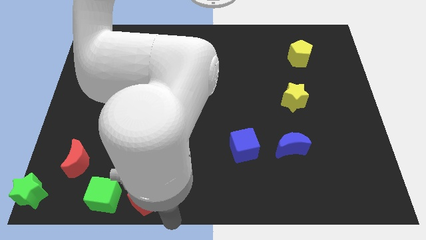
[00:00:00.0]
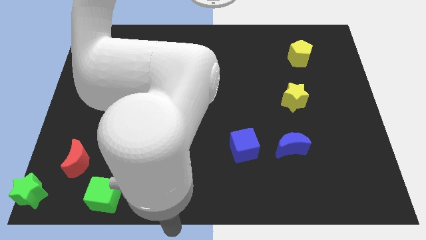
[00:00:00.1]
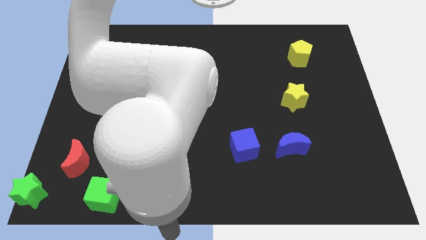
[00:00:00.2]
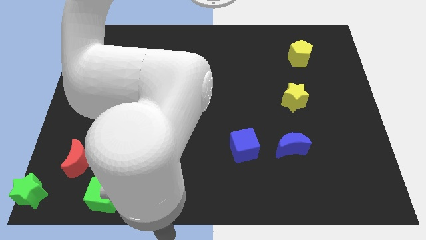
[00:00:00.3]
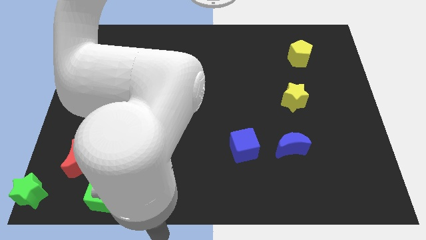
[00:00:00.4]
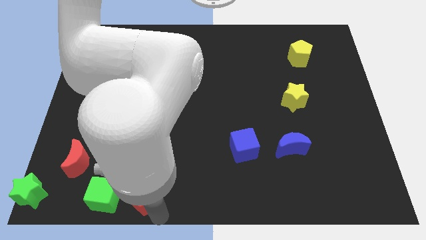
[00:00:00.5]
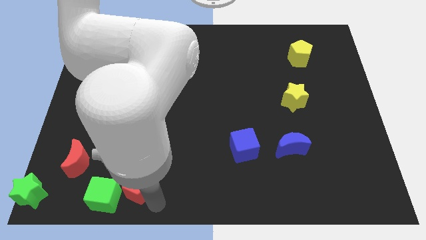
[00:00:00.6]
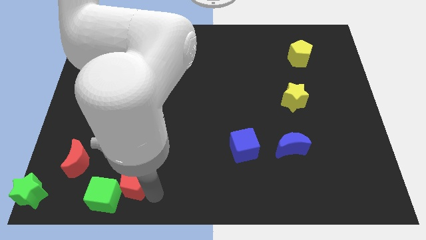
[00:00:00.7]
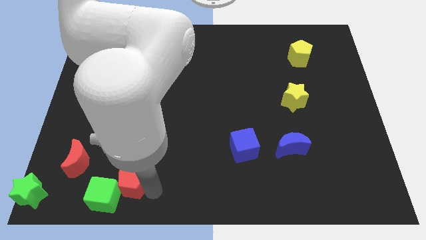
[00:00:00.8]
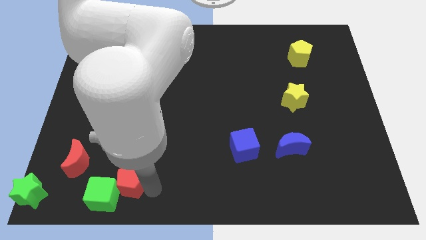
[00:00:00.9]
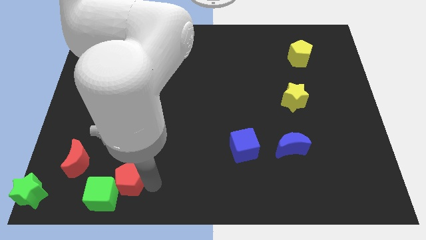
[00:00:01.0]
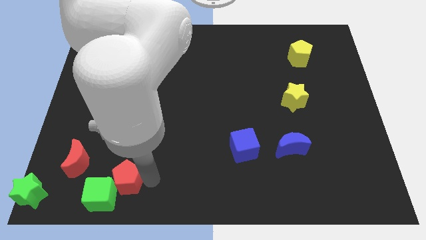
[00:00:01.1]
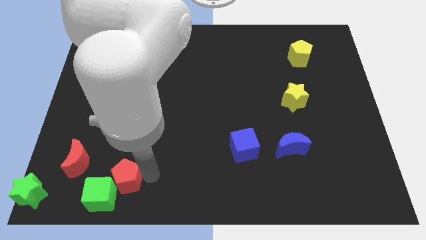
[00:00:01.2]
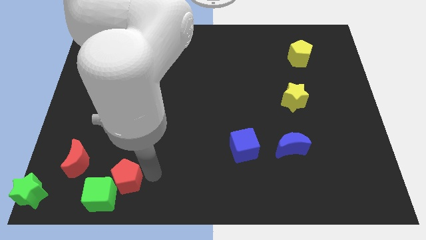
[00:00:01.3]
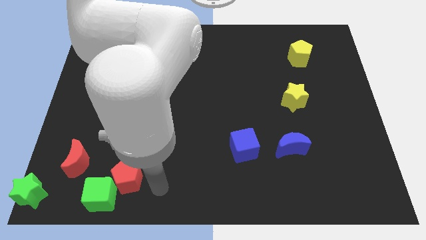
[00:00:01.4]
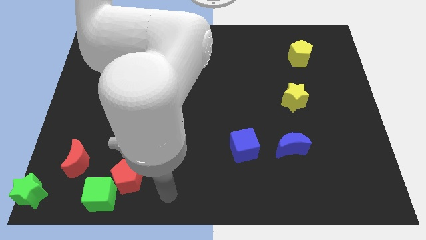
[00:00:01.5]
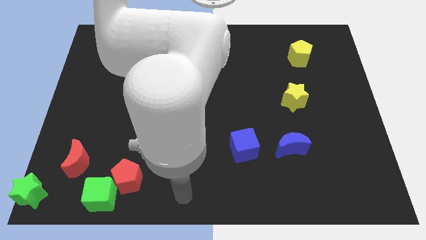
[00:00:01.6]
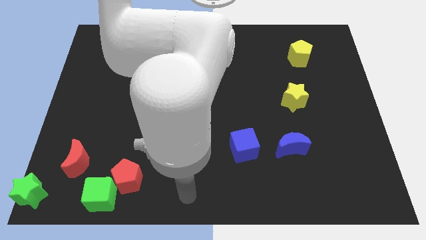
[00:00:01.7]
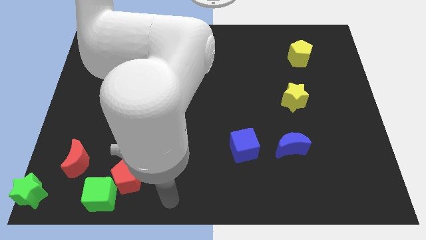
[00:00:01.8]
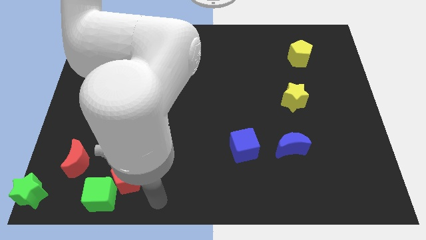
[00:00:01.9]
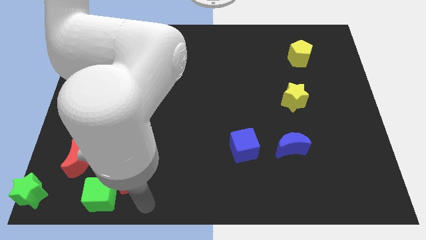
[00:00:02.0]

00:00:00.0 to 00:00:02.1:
place the red pentagon to the top right of the green cube

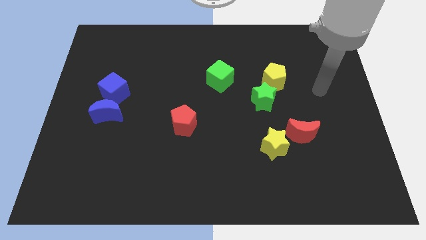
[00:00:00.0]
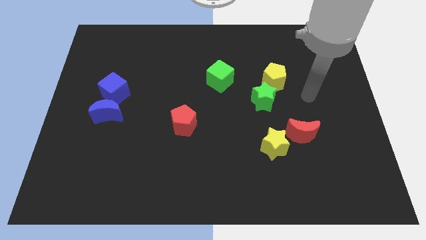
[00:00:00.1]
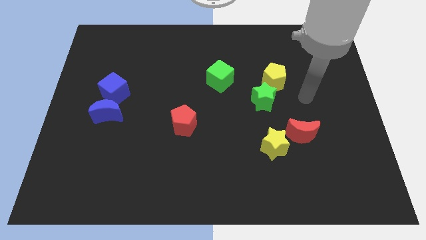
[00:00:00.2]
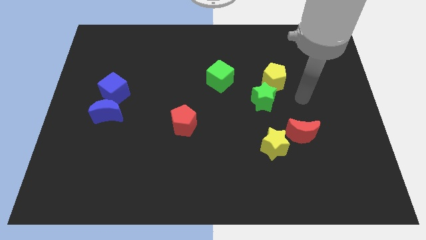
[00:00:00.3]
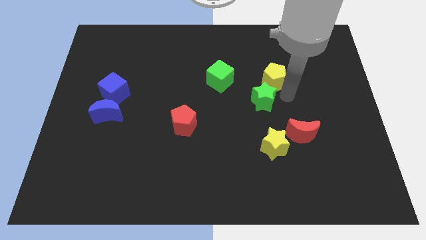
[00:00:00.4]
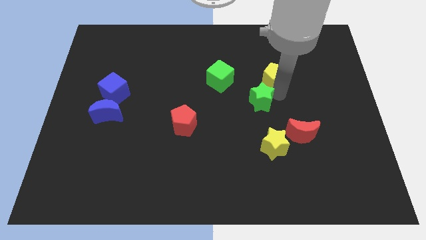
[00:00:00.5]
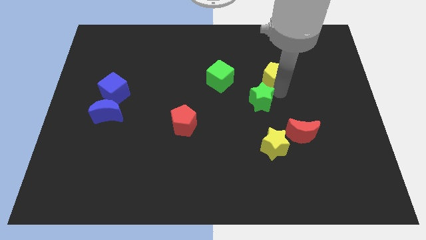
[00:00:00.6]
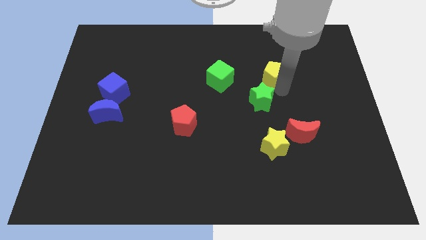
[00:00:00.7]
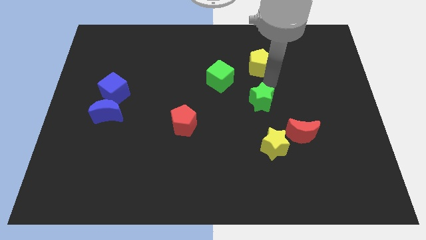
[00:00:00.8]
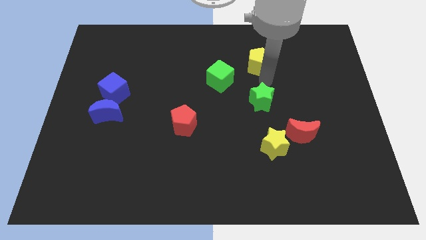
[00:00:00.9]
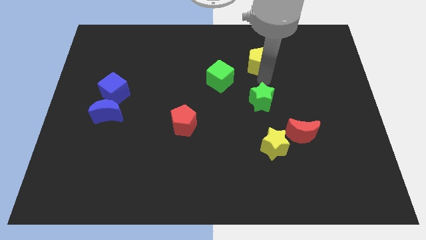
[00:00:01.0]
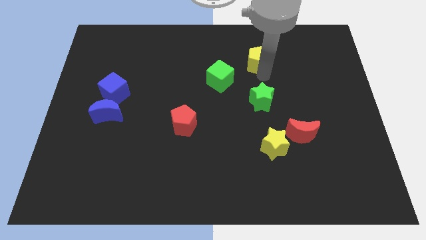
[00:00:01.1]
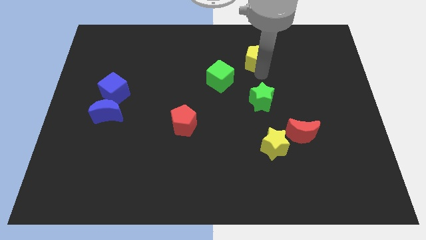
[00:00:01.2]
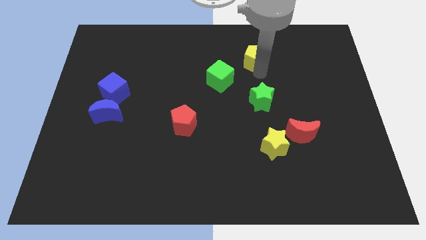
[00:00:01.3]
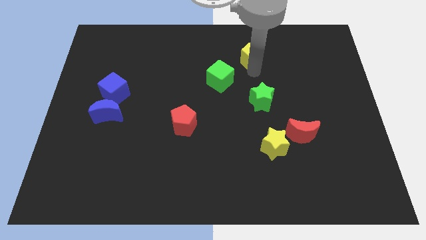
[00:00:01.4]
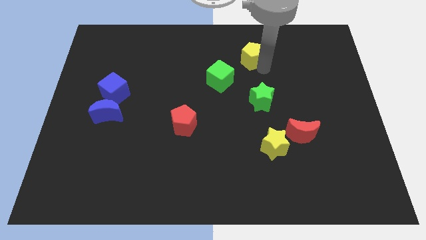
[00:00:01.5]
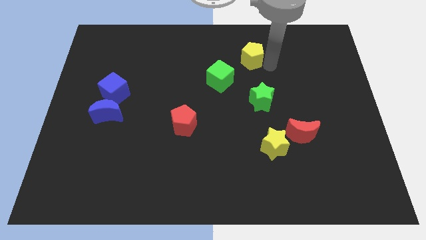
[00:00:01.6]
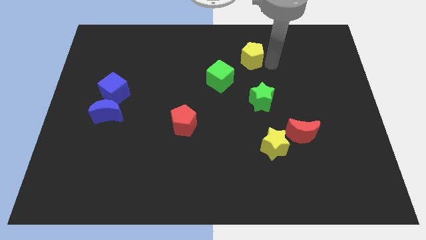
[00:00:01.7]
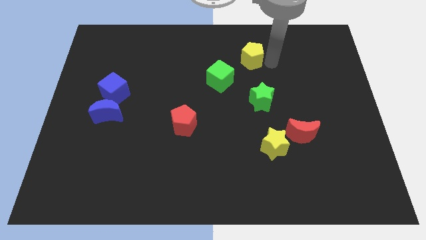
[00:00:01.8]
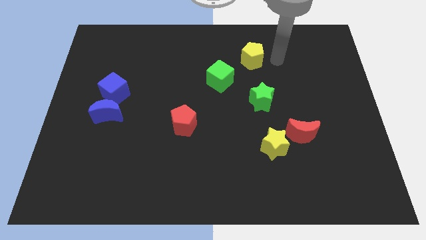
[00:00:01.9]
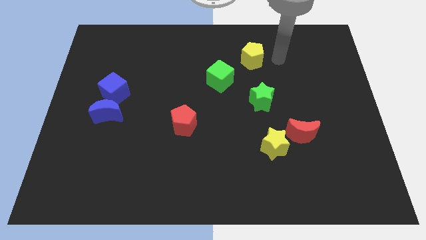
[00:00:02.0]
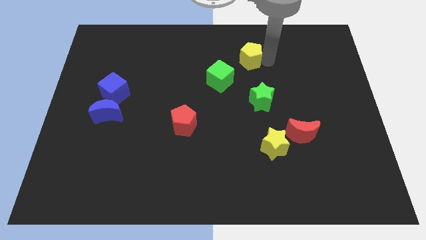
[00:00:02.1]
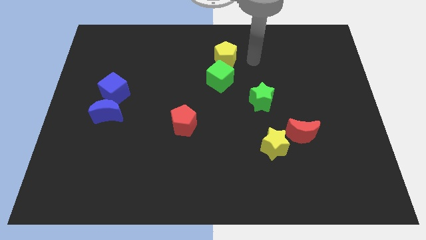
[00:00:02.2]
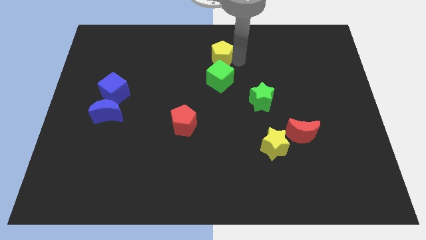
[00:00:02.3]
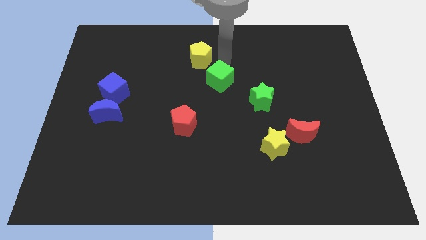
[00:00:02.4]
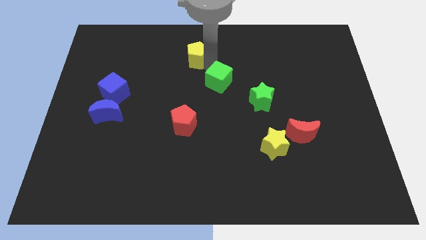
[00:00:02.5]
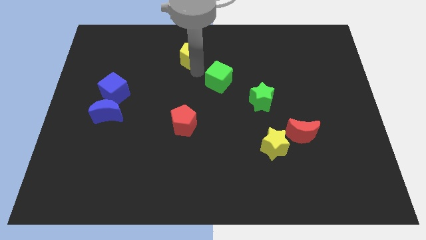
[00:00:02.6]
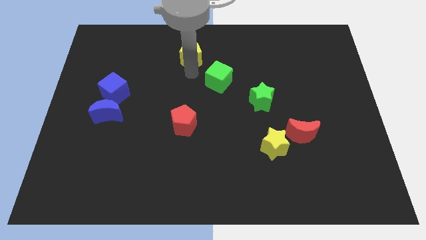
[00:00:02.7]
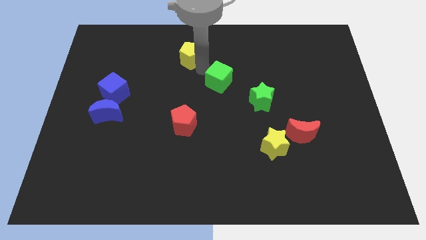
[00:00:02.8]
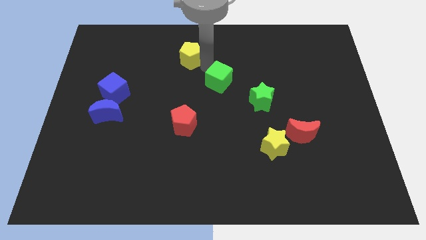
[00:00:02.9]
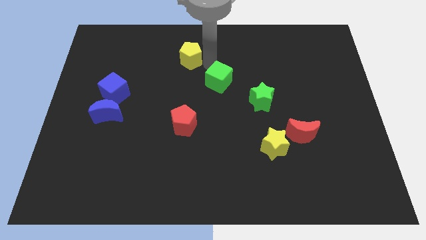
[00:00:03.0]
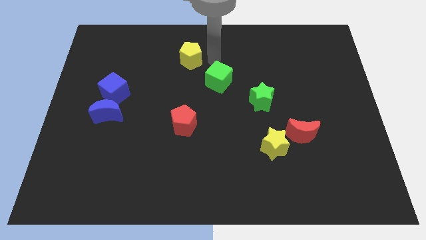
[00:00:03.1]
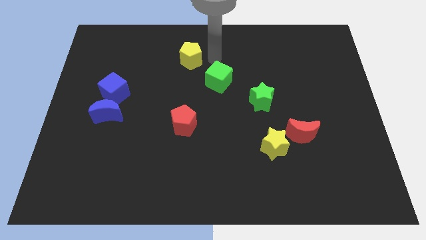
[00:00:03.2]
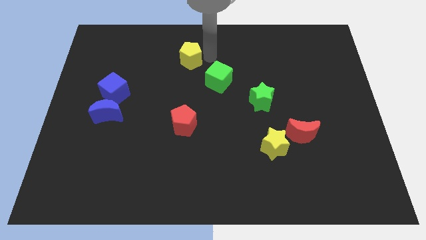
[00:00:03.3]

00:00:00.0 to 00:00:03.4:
place the yellow pentagon vertically above the red pentagon

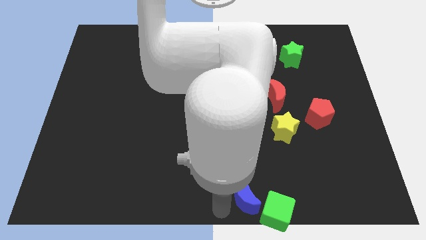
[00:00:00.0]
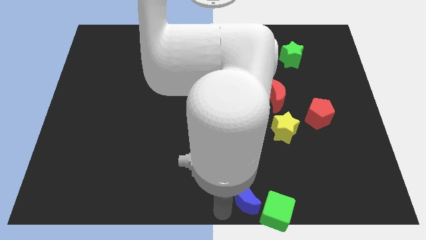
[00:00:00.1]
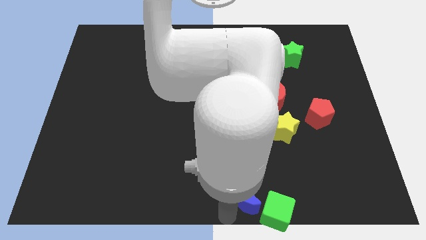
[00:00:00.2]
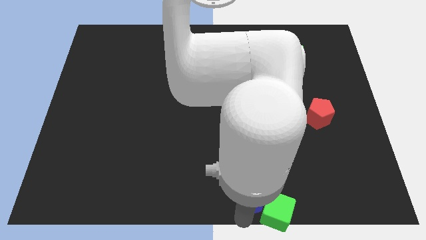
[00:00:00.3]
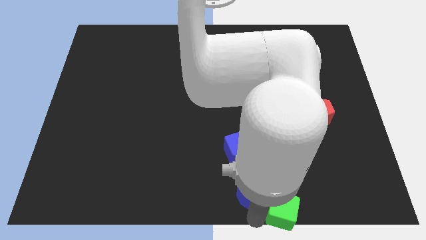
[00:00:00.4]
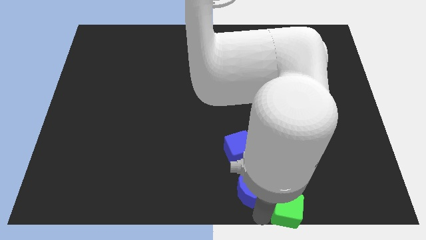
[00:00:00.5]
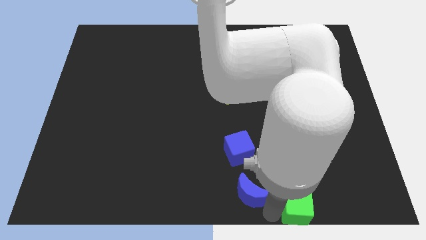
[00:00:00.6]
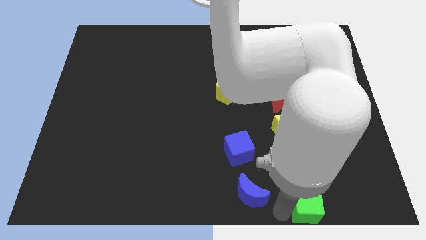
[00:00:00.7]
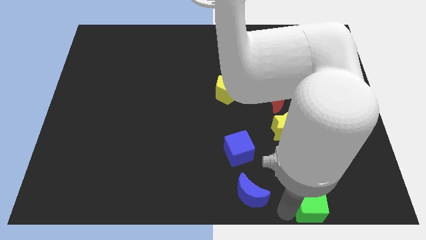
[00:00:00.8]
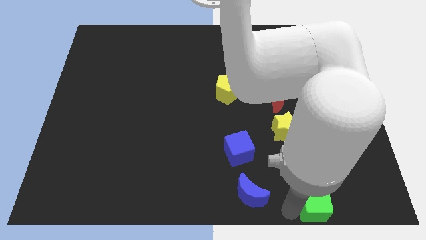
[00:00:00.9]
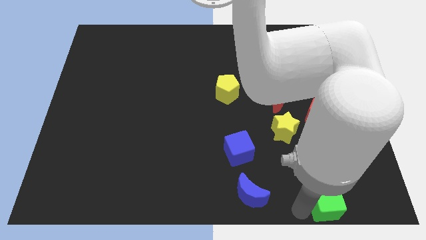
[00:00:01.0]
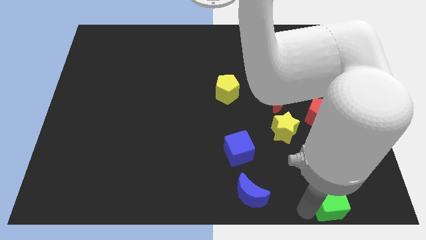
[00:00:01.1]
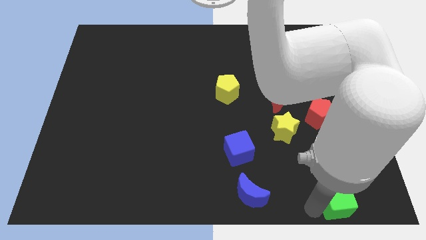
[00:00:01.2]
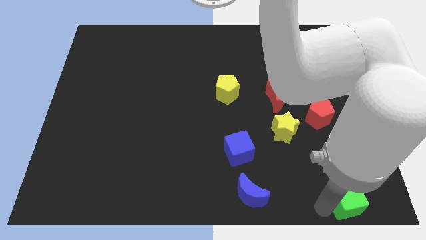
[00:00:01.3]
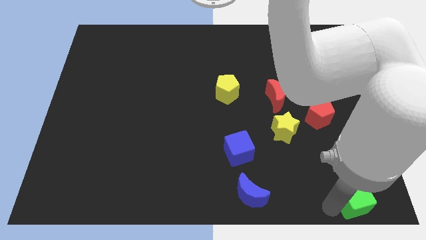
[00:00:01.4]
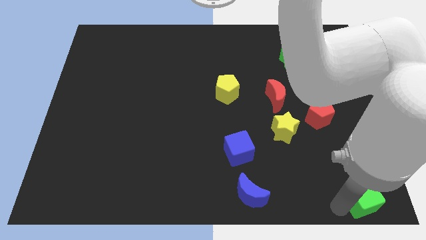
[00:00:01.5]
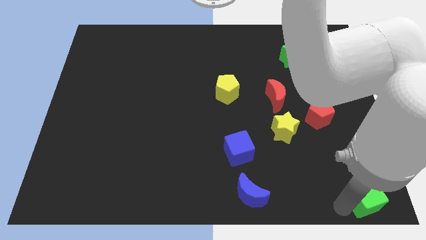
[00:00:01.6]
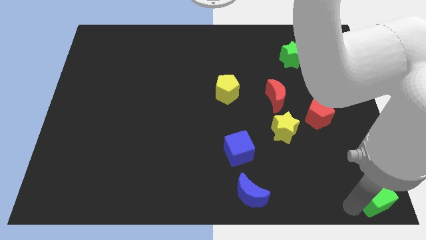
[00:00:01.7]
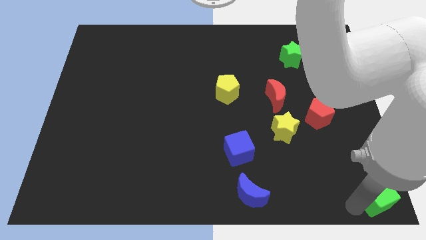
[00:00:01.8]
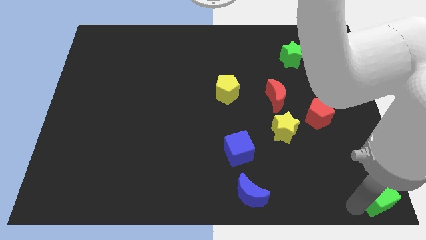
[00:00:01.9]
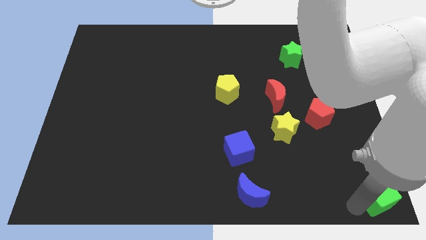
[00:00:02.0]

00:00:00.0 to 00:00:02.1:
slide green cube to the bottom right

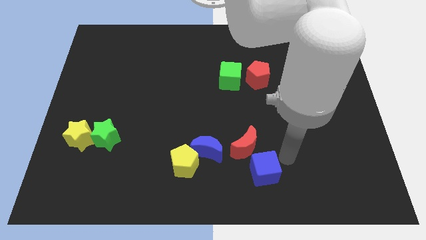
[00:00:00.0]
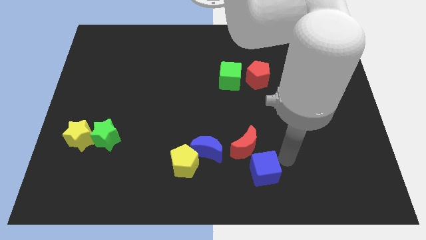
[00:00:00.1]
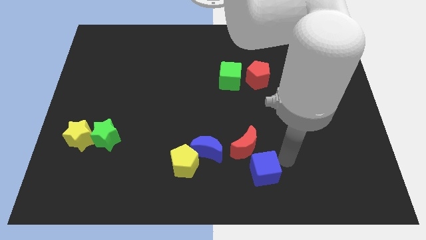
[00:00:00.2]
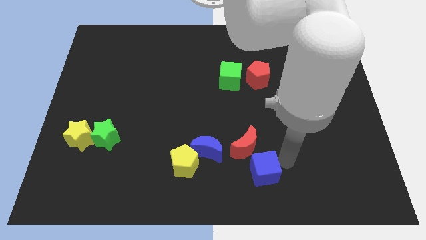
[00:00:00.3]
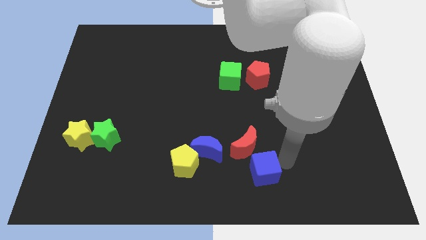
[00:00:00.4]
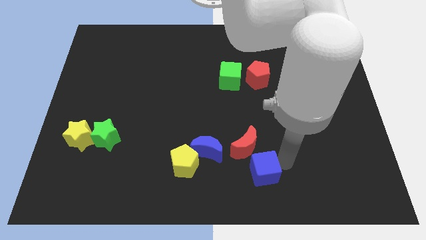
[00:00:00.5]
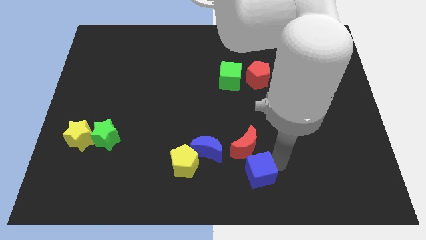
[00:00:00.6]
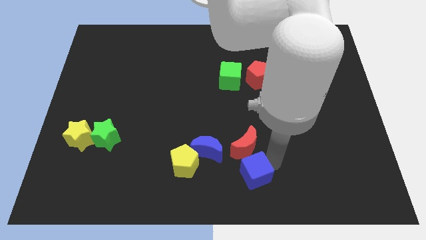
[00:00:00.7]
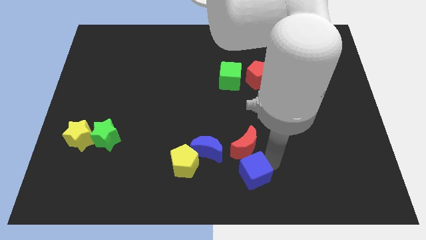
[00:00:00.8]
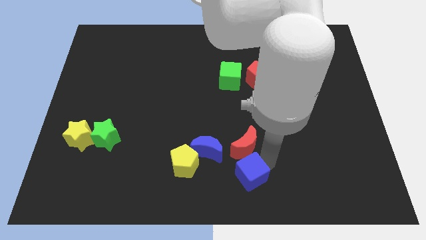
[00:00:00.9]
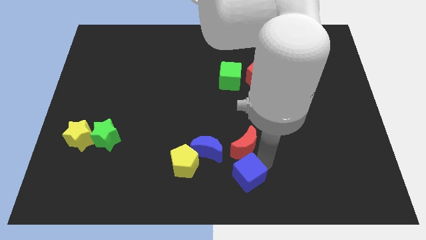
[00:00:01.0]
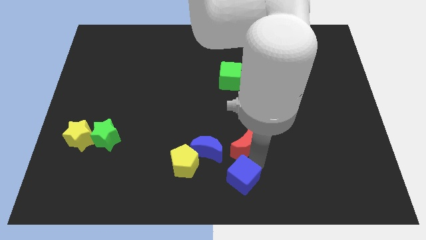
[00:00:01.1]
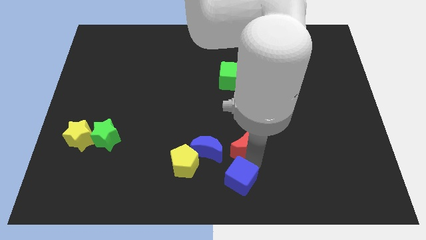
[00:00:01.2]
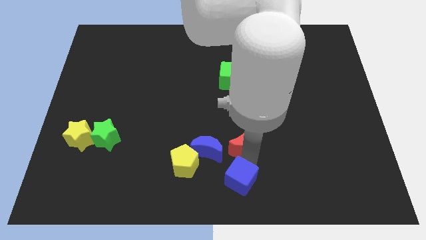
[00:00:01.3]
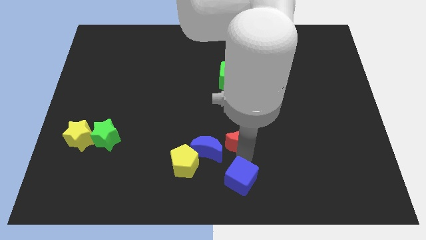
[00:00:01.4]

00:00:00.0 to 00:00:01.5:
move the blue cube to the bottom side of the red moon
